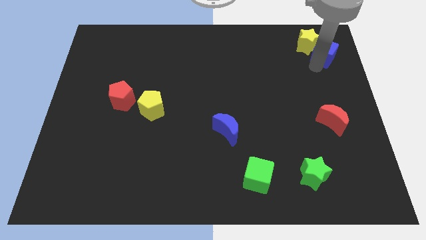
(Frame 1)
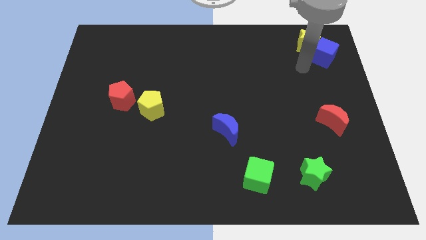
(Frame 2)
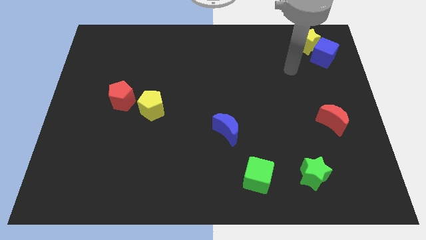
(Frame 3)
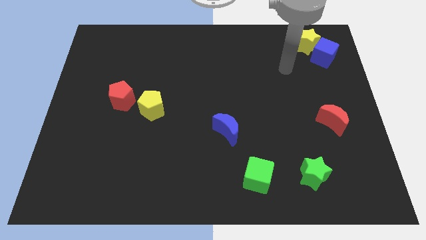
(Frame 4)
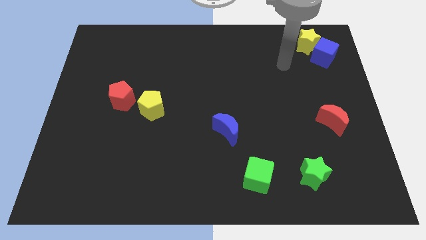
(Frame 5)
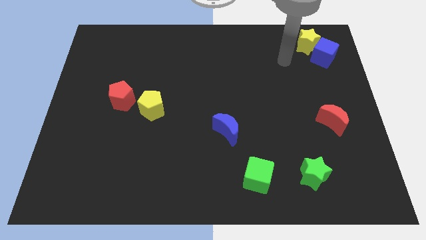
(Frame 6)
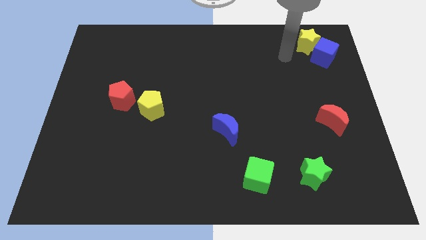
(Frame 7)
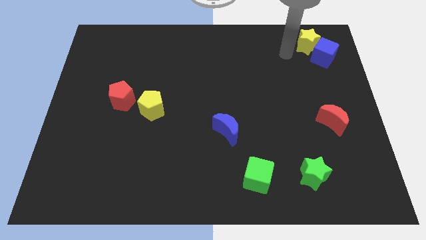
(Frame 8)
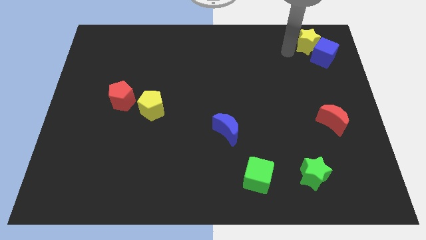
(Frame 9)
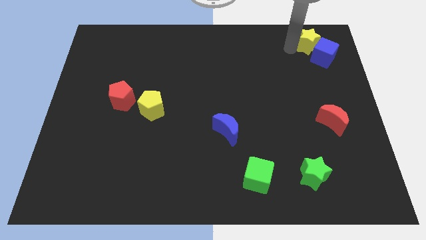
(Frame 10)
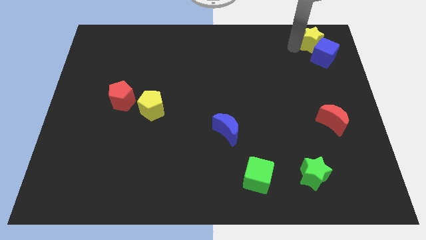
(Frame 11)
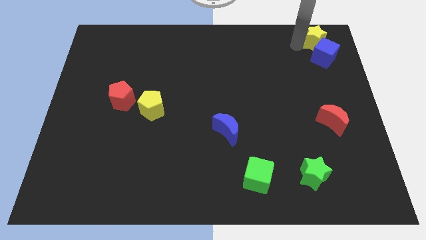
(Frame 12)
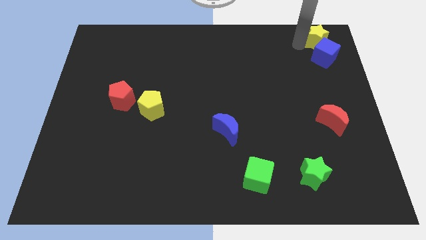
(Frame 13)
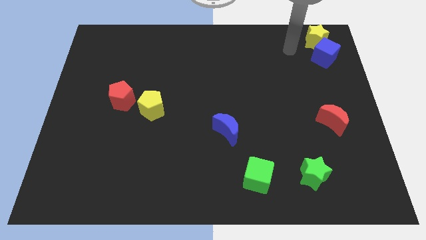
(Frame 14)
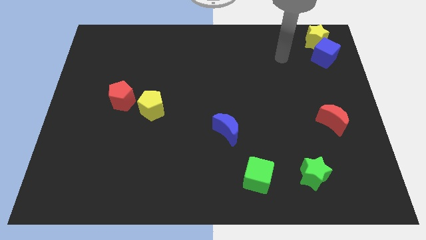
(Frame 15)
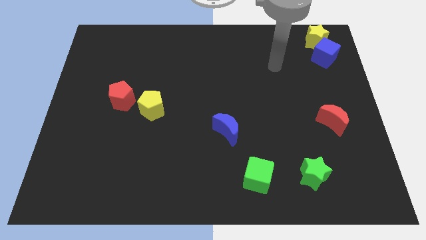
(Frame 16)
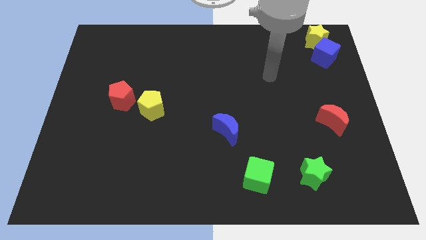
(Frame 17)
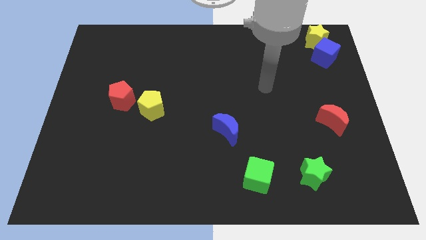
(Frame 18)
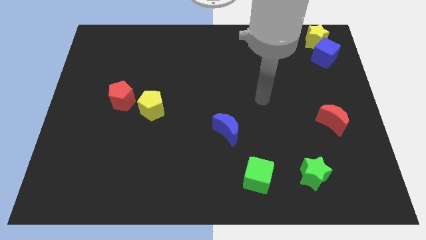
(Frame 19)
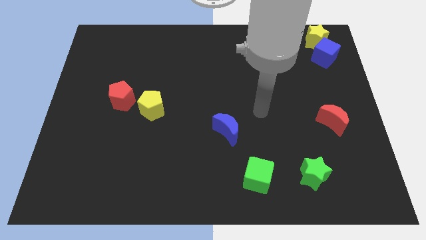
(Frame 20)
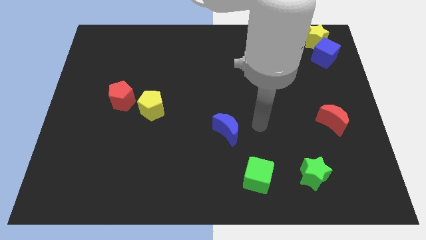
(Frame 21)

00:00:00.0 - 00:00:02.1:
slide yellow star to the top right

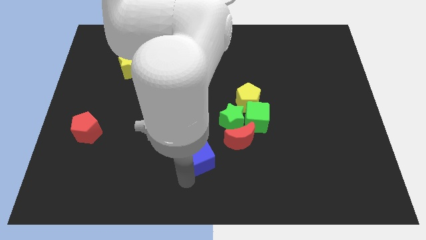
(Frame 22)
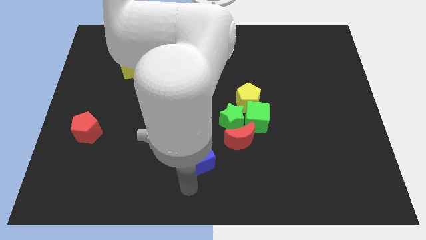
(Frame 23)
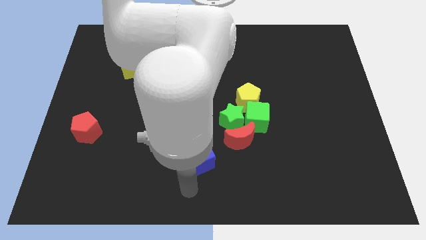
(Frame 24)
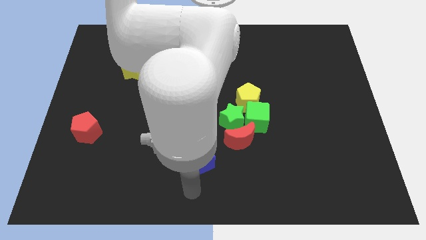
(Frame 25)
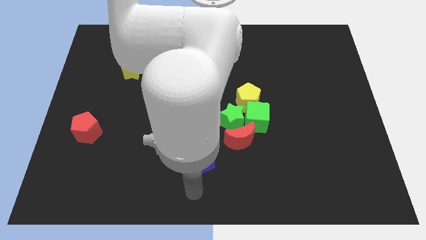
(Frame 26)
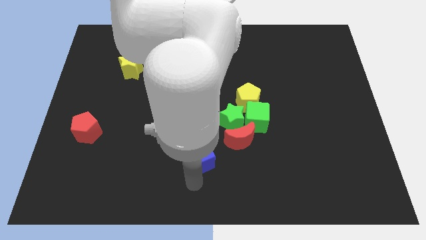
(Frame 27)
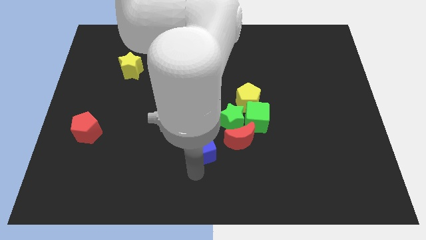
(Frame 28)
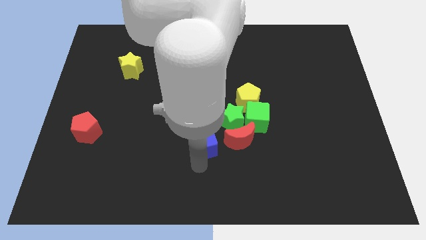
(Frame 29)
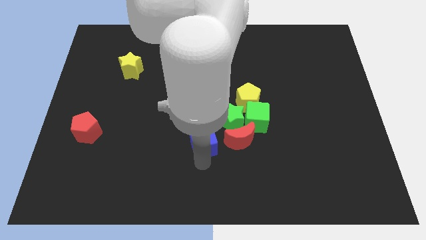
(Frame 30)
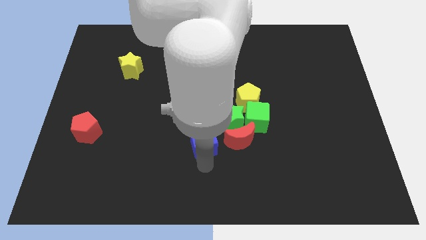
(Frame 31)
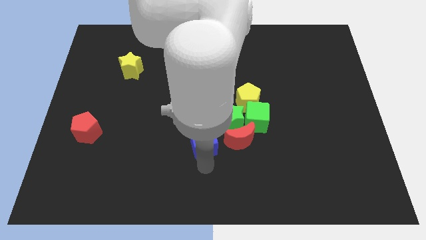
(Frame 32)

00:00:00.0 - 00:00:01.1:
move the blue cube left to the red crescent

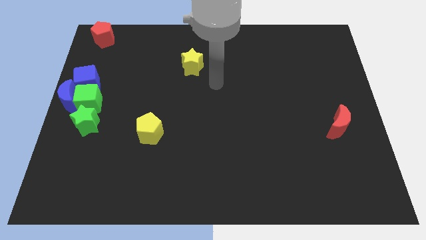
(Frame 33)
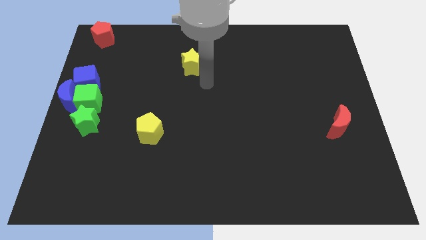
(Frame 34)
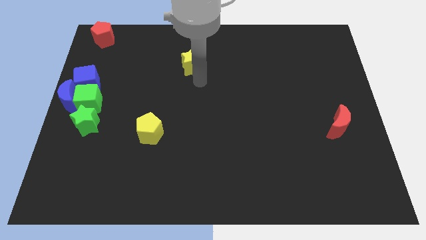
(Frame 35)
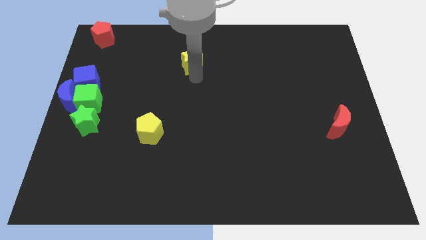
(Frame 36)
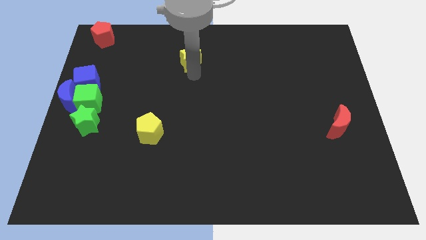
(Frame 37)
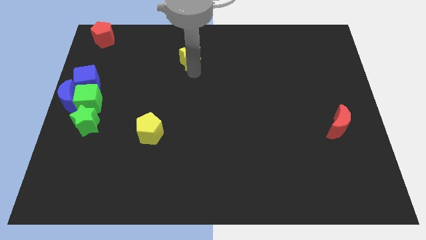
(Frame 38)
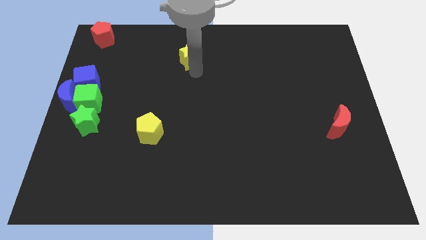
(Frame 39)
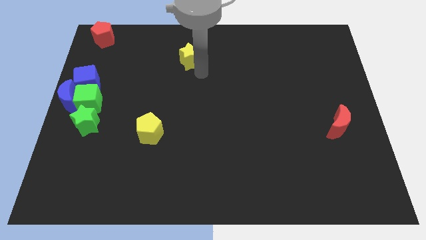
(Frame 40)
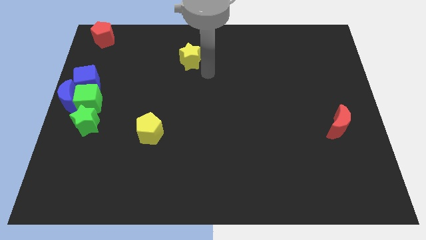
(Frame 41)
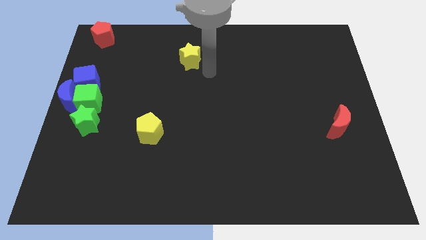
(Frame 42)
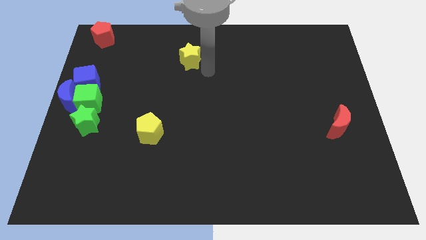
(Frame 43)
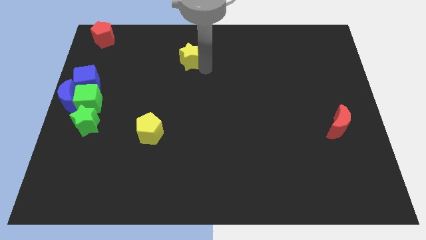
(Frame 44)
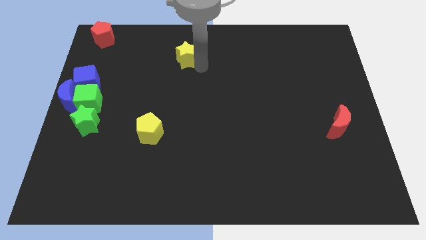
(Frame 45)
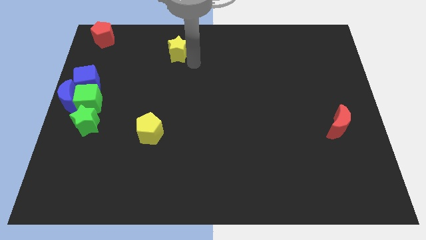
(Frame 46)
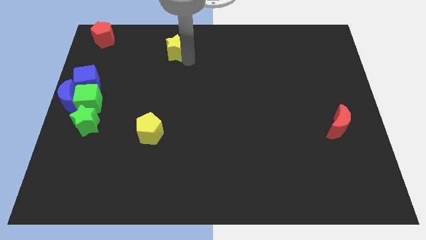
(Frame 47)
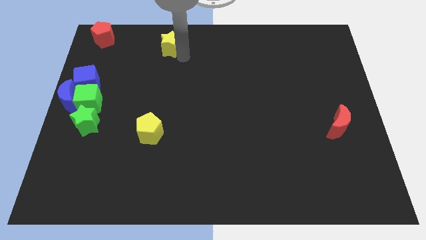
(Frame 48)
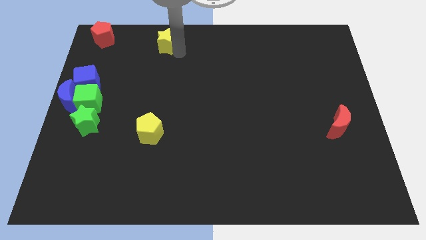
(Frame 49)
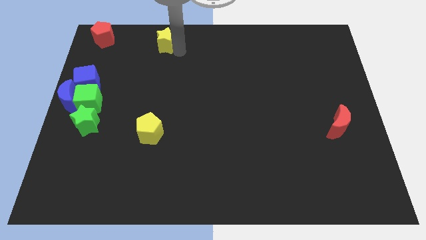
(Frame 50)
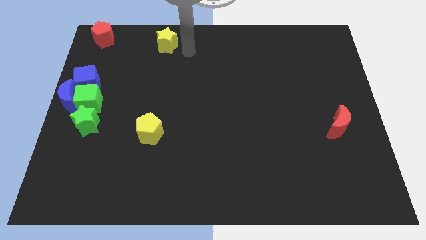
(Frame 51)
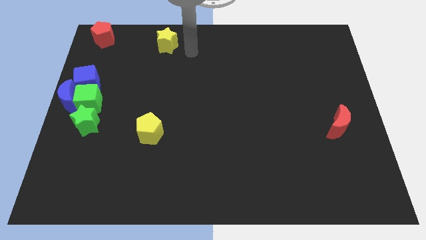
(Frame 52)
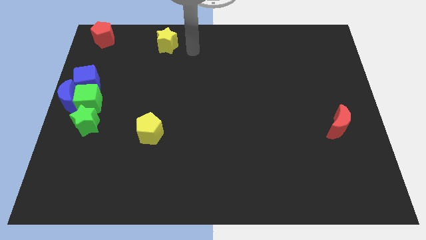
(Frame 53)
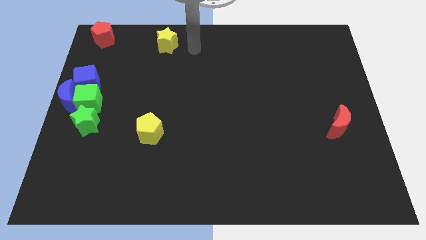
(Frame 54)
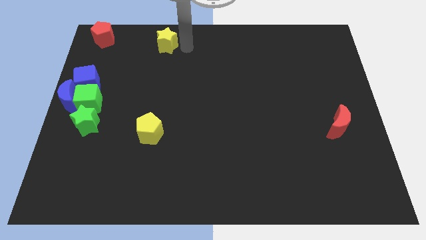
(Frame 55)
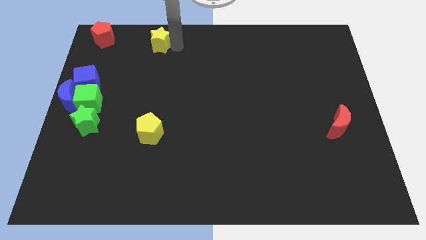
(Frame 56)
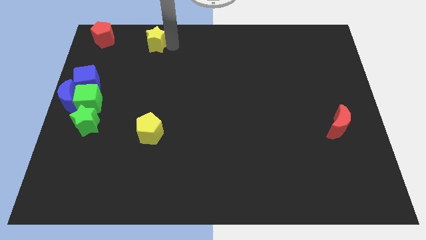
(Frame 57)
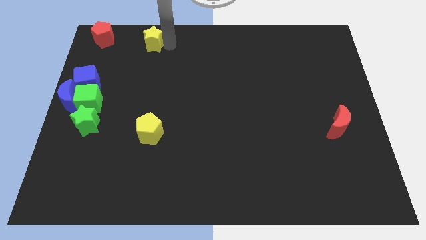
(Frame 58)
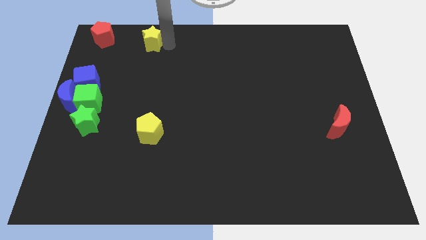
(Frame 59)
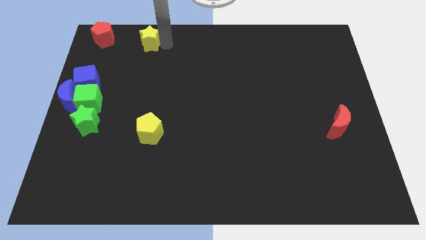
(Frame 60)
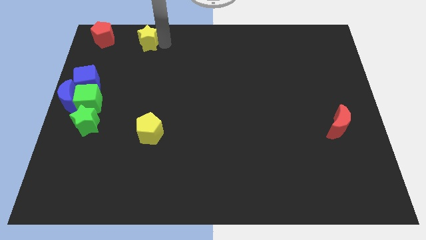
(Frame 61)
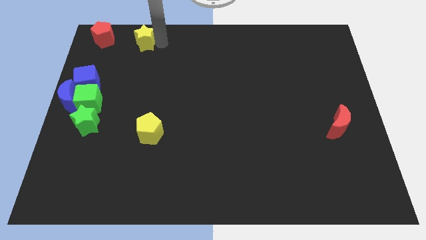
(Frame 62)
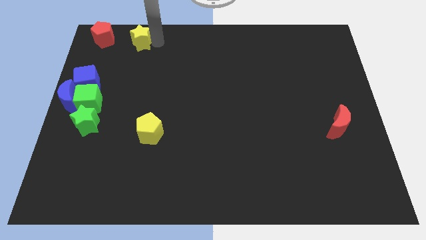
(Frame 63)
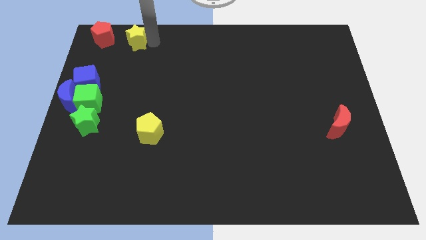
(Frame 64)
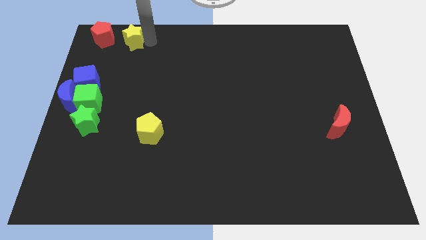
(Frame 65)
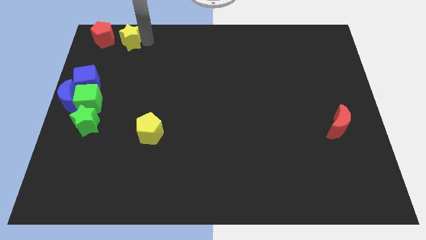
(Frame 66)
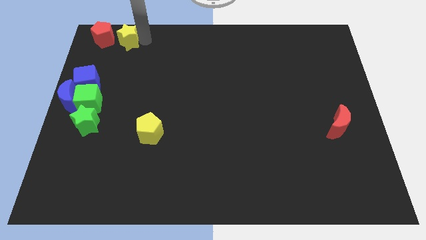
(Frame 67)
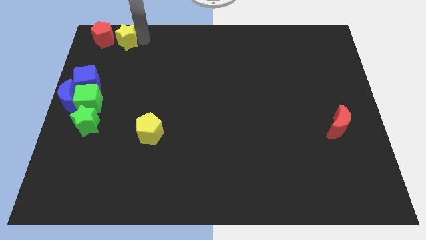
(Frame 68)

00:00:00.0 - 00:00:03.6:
push the yellow star towards the top left side of the board

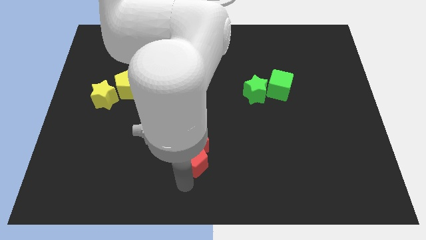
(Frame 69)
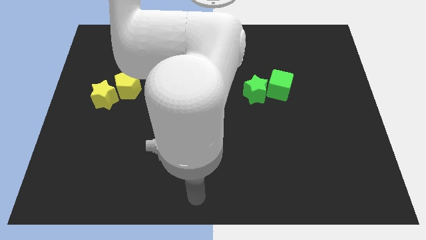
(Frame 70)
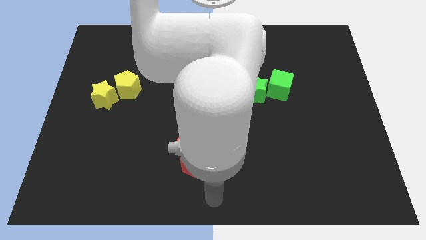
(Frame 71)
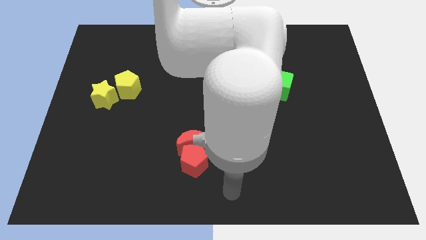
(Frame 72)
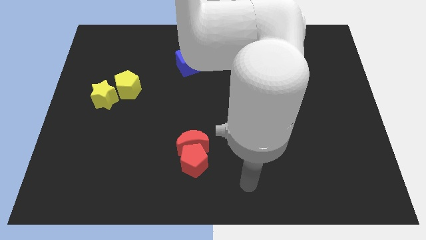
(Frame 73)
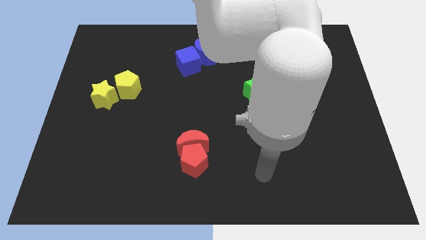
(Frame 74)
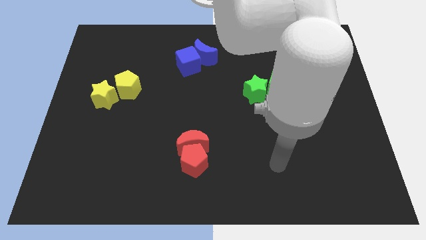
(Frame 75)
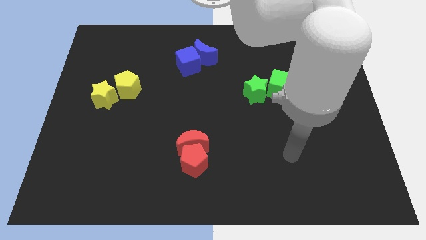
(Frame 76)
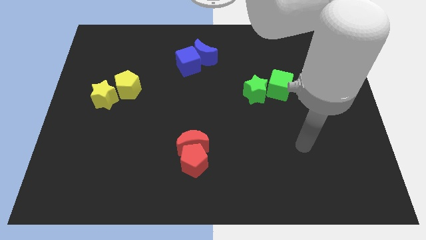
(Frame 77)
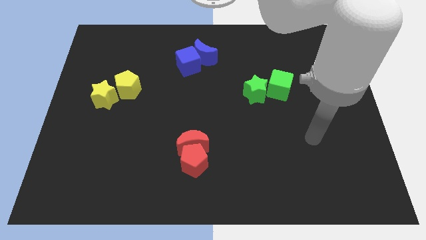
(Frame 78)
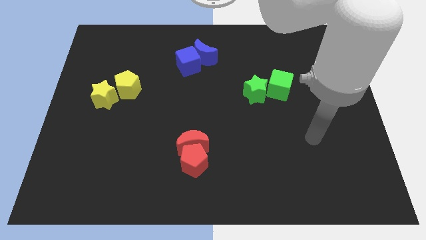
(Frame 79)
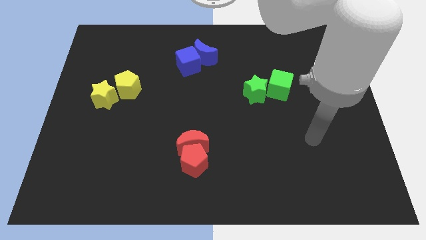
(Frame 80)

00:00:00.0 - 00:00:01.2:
move your arm towards the green cube

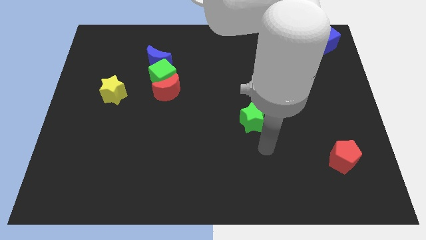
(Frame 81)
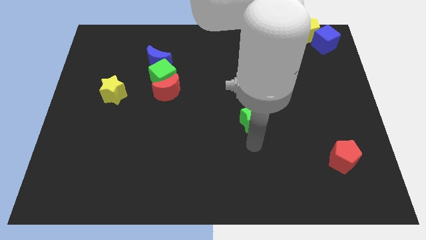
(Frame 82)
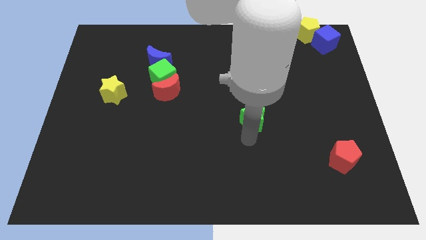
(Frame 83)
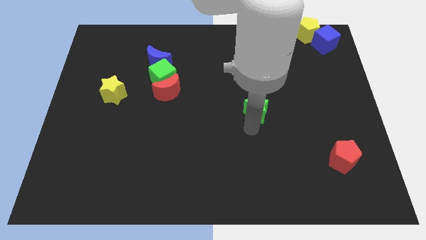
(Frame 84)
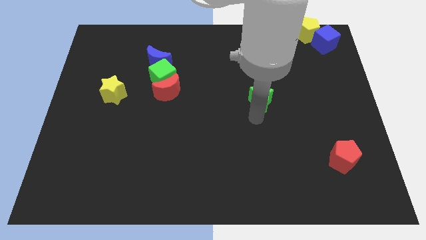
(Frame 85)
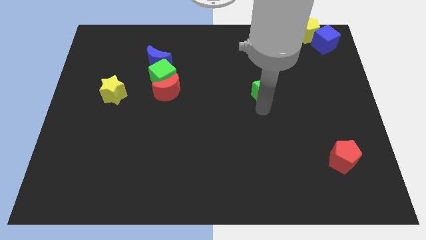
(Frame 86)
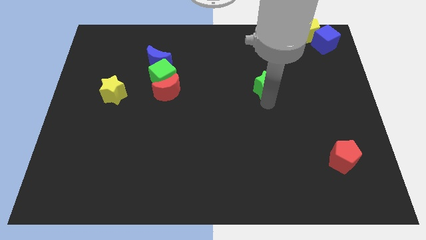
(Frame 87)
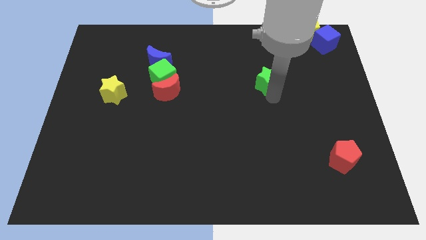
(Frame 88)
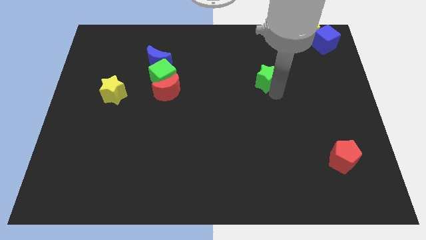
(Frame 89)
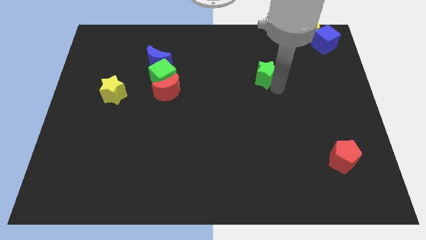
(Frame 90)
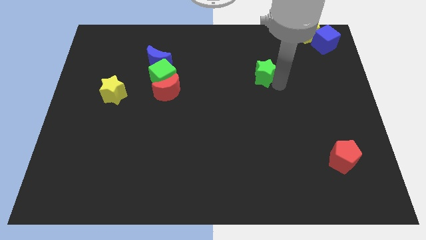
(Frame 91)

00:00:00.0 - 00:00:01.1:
move the green star towards the top right side of the board
